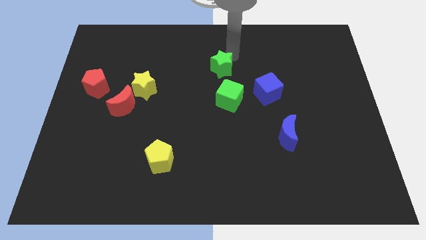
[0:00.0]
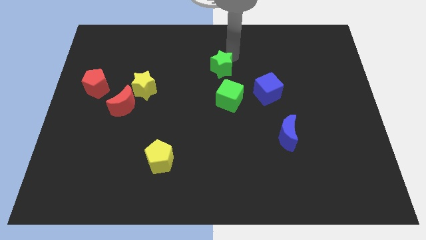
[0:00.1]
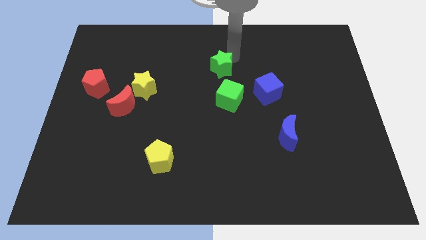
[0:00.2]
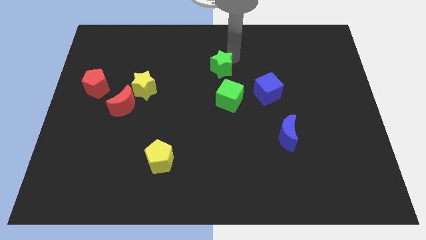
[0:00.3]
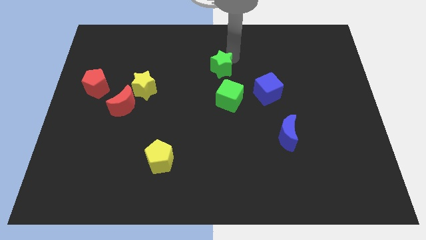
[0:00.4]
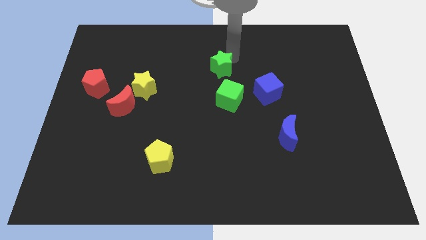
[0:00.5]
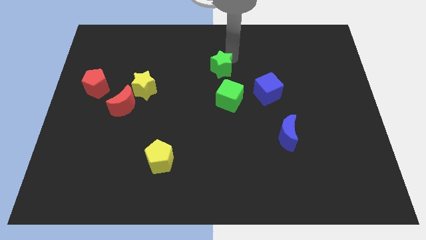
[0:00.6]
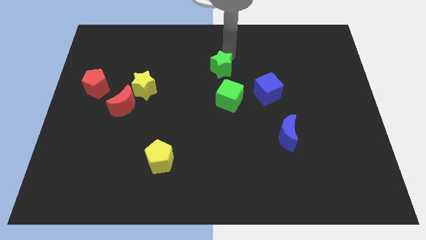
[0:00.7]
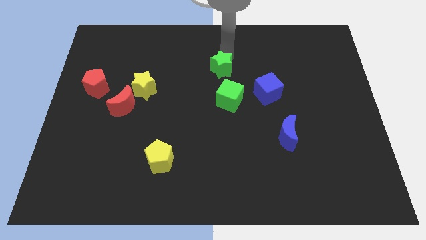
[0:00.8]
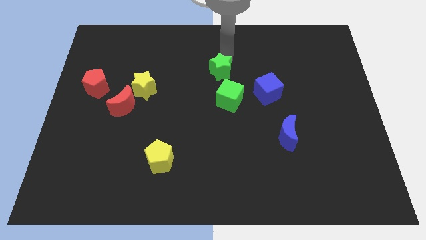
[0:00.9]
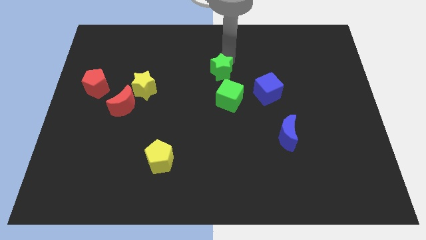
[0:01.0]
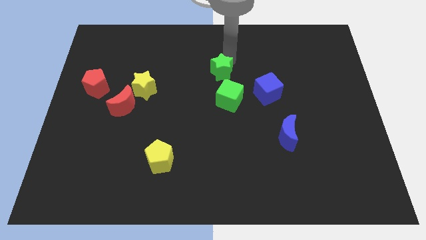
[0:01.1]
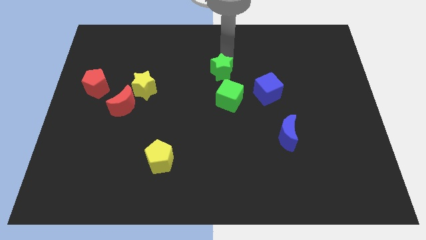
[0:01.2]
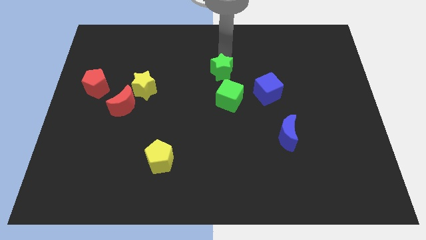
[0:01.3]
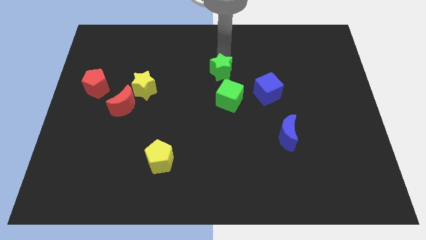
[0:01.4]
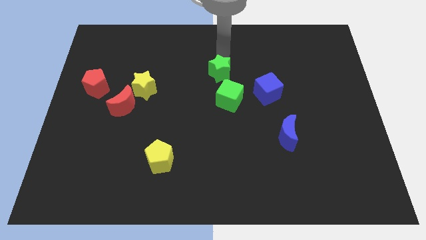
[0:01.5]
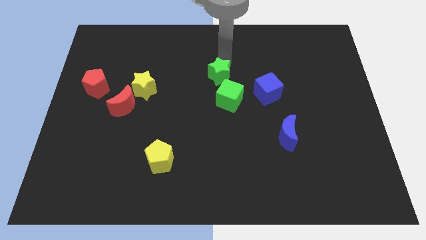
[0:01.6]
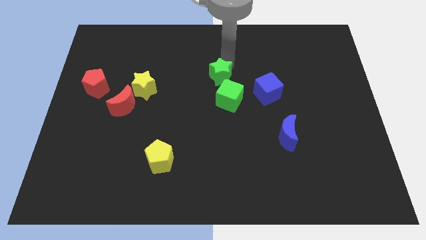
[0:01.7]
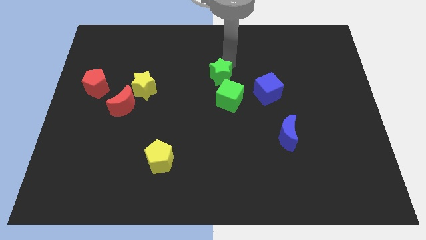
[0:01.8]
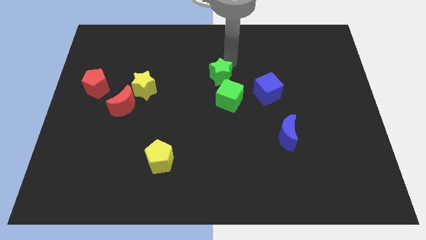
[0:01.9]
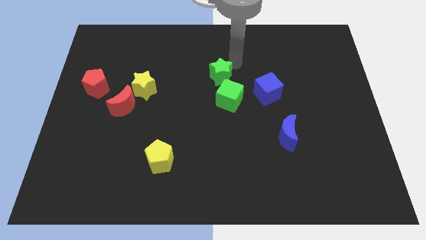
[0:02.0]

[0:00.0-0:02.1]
push the green star slightly downwards

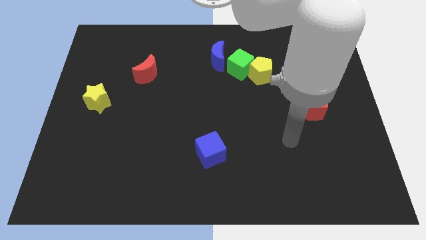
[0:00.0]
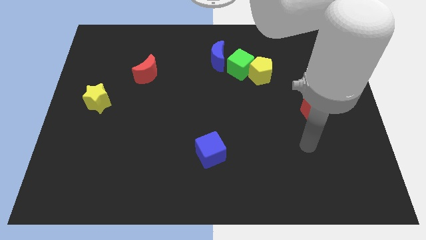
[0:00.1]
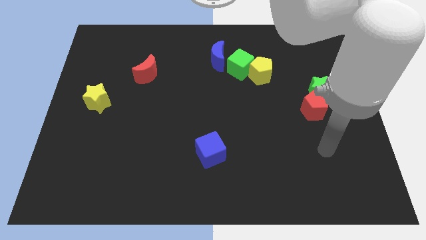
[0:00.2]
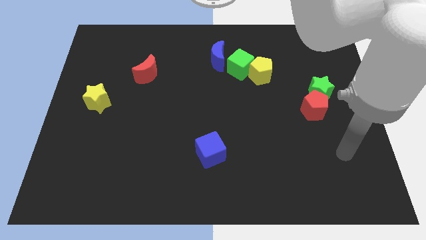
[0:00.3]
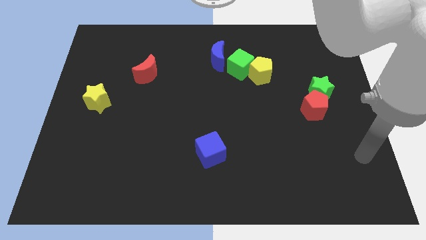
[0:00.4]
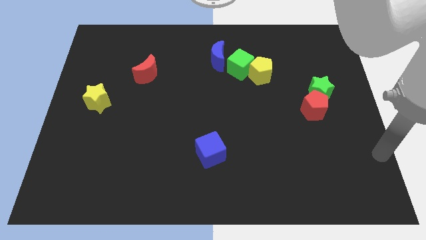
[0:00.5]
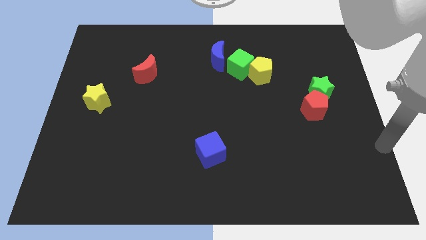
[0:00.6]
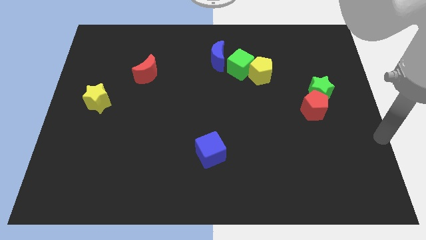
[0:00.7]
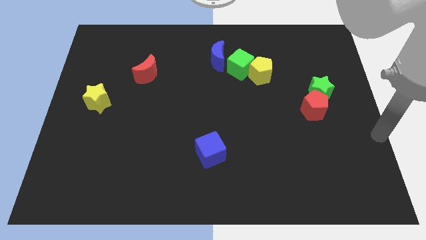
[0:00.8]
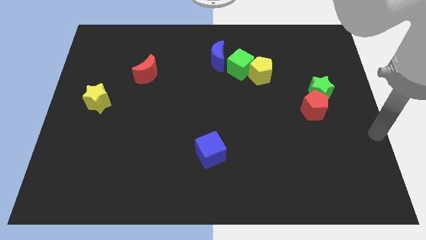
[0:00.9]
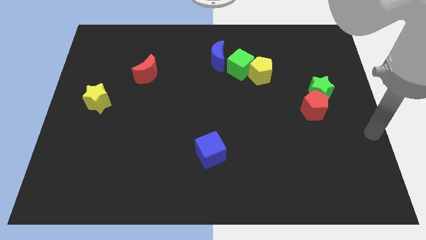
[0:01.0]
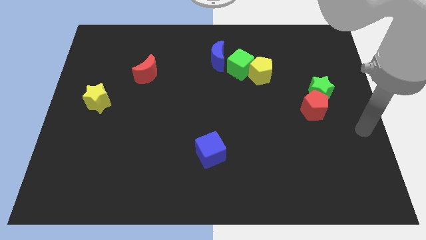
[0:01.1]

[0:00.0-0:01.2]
place your arm to center right

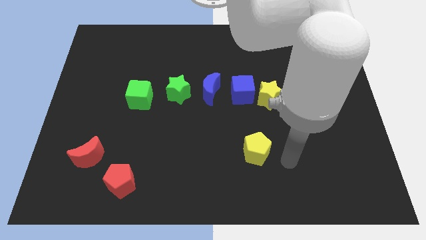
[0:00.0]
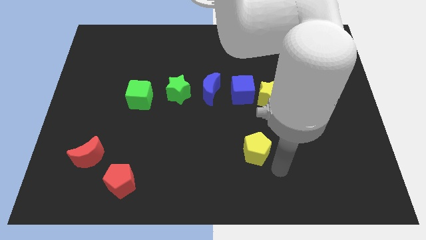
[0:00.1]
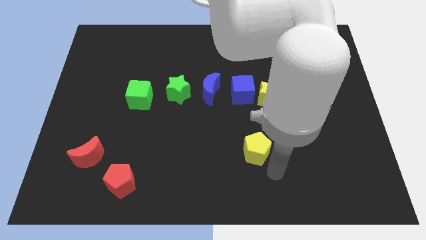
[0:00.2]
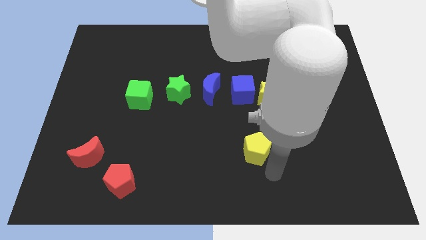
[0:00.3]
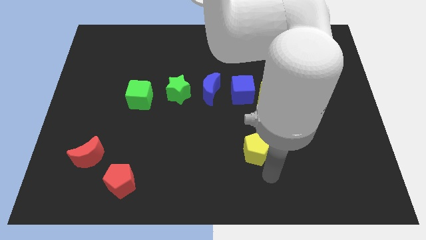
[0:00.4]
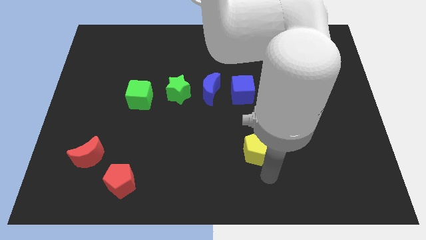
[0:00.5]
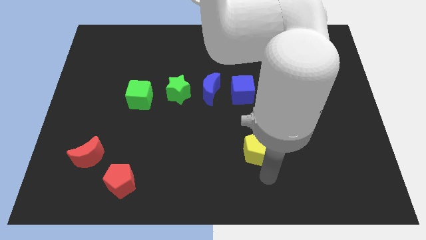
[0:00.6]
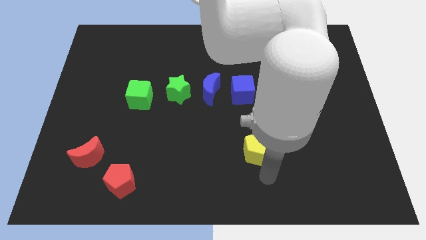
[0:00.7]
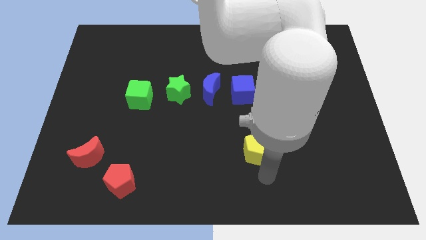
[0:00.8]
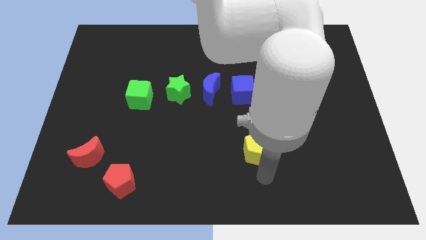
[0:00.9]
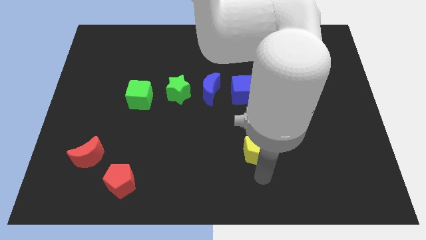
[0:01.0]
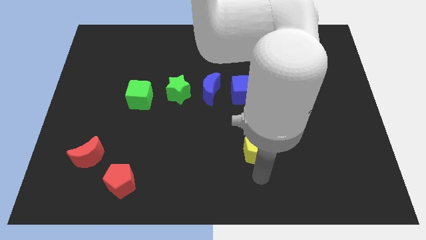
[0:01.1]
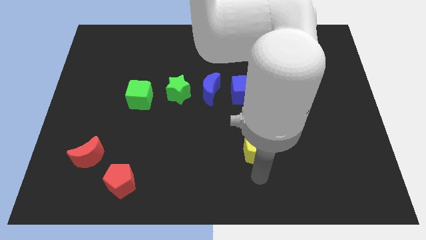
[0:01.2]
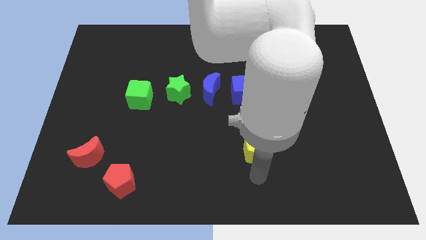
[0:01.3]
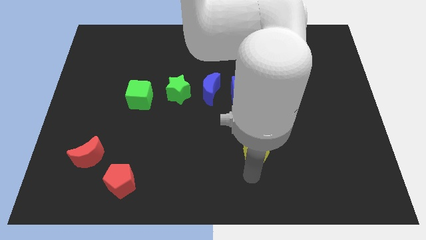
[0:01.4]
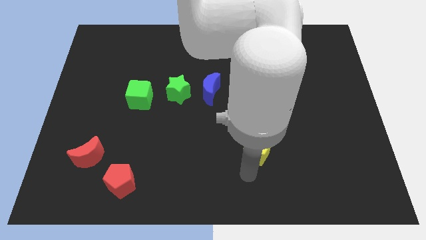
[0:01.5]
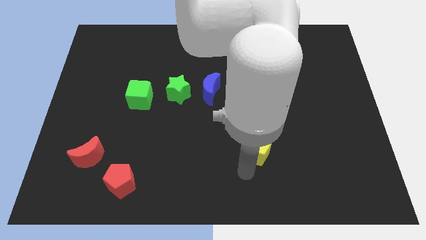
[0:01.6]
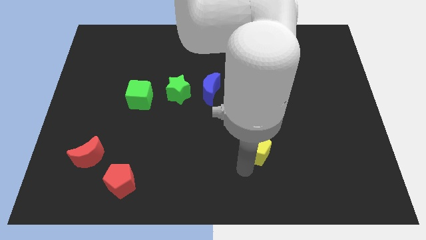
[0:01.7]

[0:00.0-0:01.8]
point the arm below the yellow pentagon

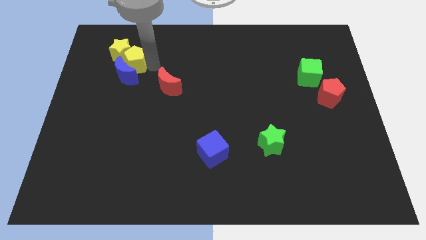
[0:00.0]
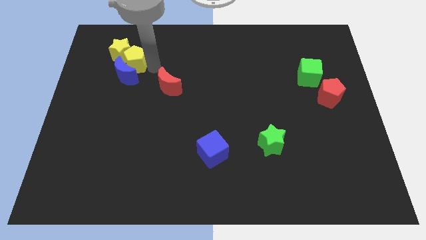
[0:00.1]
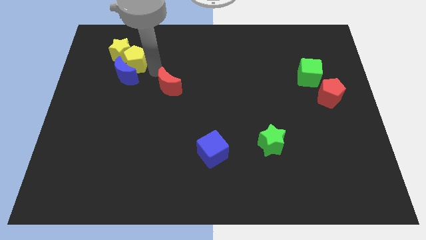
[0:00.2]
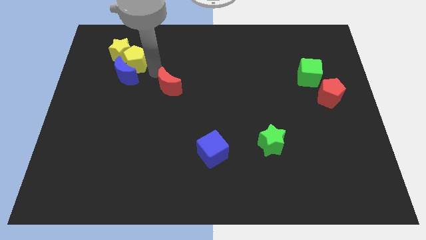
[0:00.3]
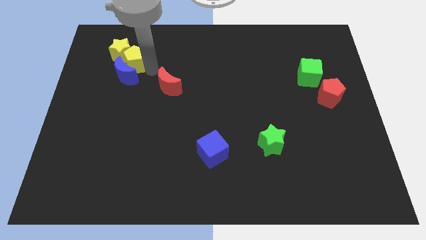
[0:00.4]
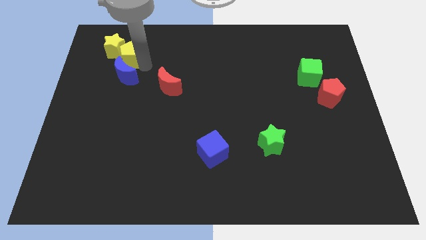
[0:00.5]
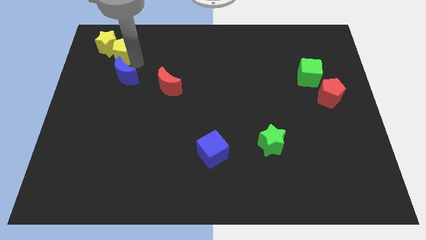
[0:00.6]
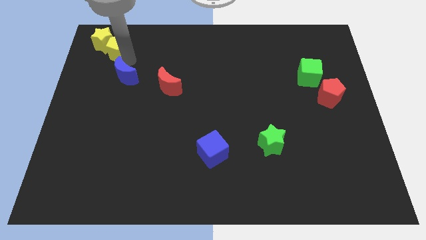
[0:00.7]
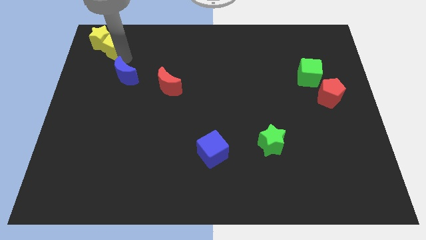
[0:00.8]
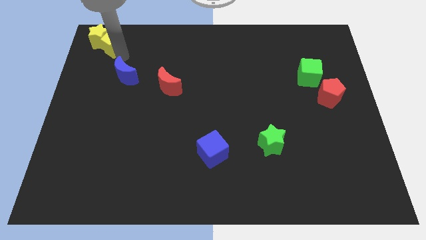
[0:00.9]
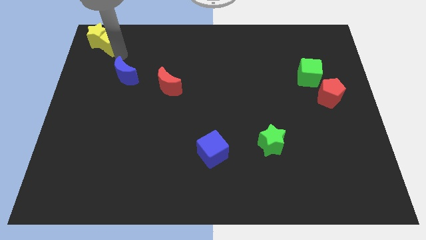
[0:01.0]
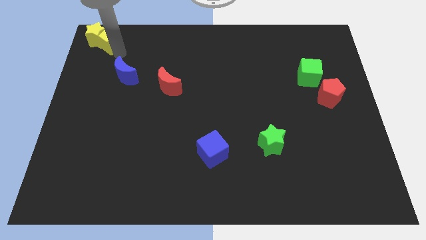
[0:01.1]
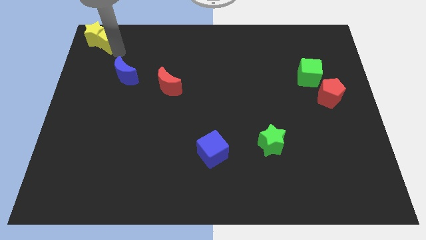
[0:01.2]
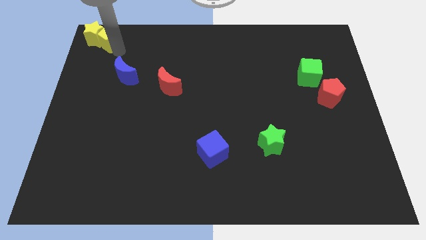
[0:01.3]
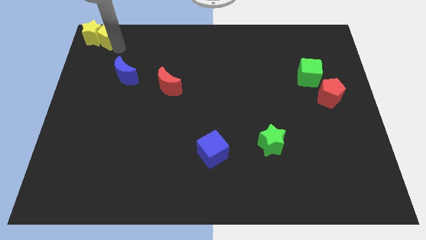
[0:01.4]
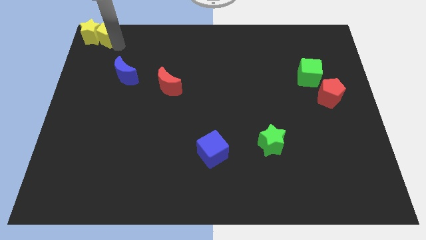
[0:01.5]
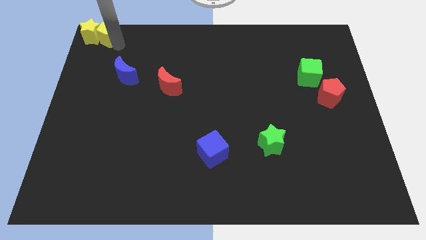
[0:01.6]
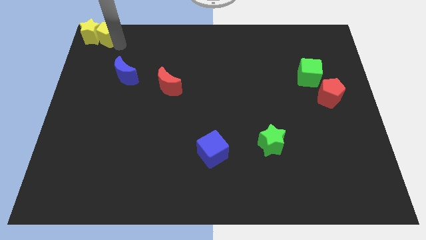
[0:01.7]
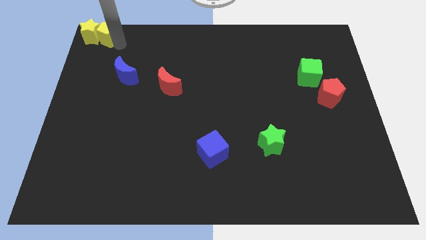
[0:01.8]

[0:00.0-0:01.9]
push yellow pentagon along the yellow star to the top left to the board

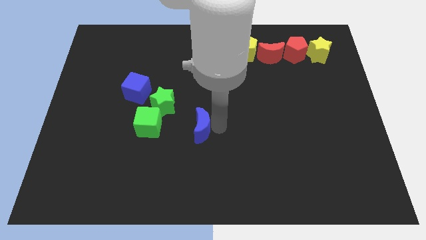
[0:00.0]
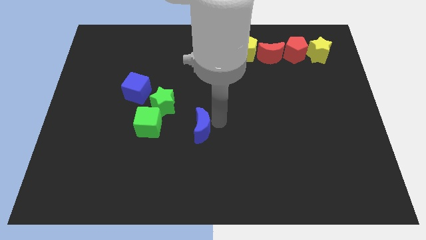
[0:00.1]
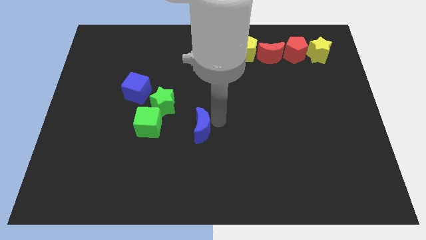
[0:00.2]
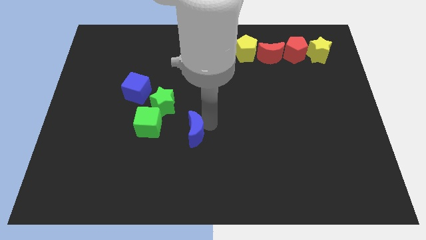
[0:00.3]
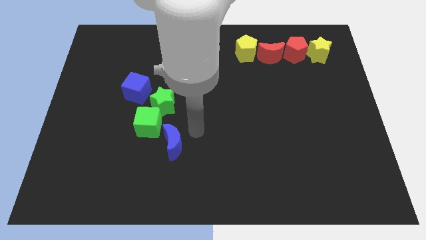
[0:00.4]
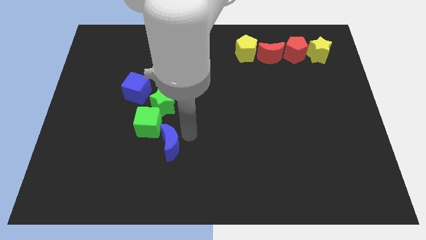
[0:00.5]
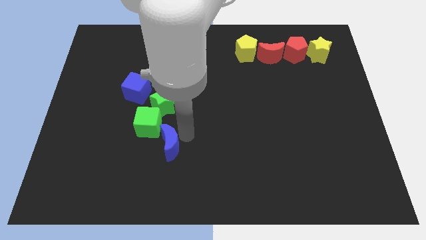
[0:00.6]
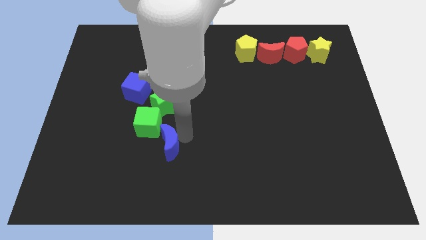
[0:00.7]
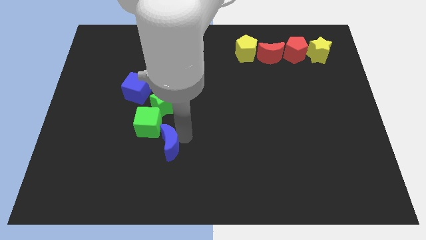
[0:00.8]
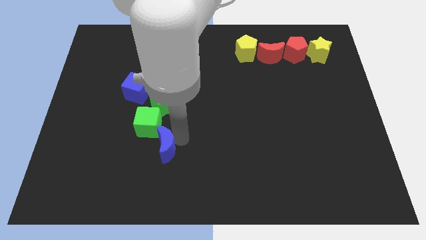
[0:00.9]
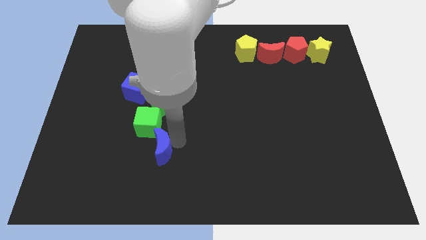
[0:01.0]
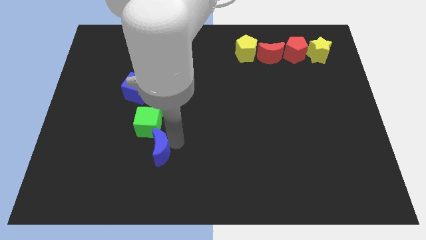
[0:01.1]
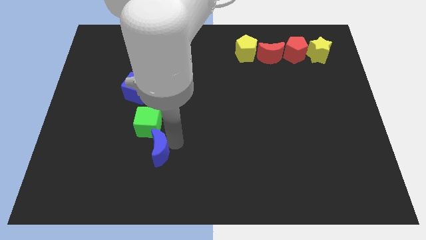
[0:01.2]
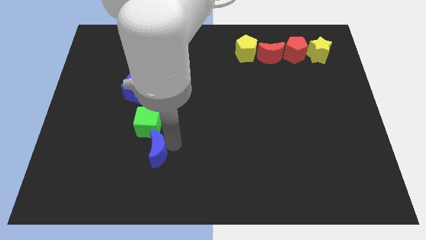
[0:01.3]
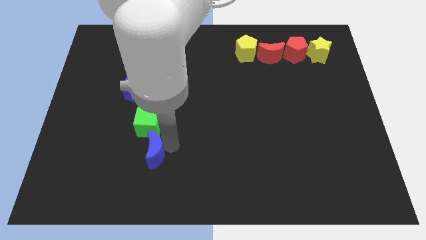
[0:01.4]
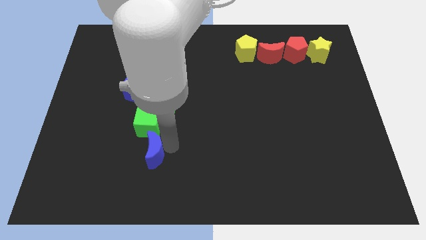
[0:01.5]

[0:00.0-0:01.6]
put the blue crescent below the green cube

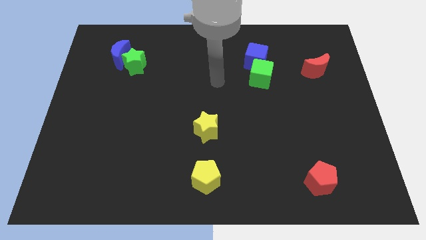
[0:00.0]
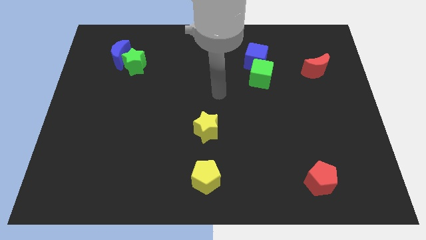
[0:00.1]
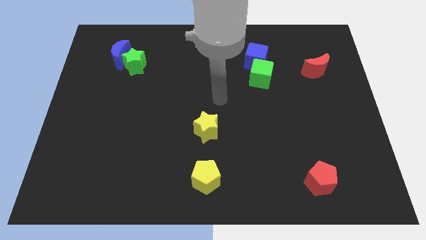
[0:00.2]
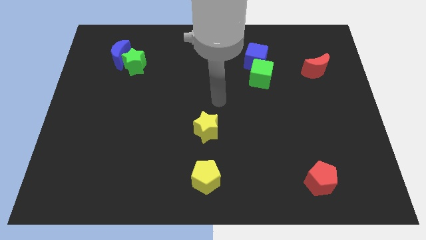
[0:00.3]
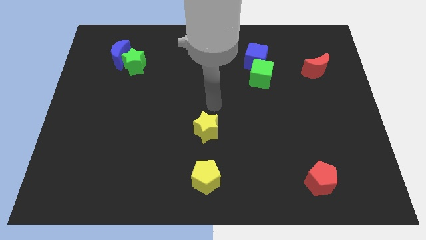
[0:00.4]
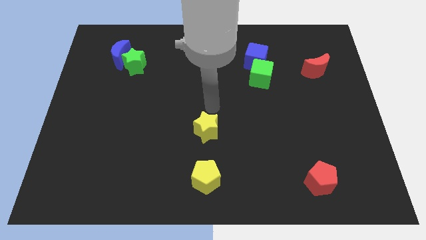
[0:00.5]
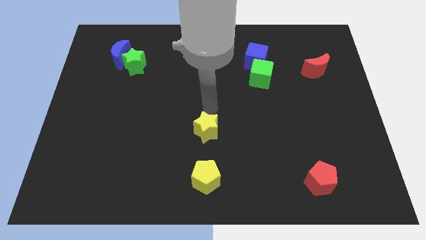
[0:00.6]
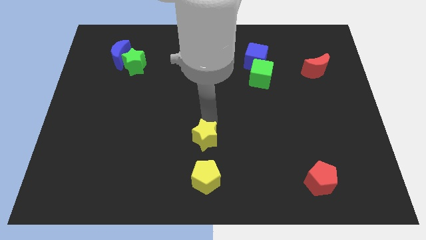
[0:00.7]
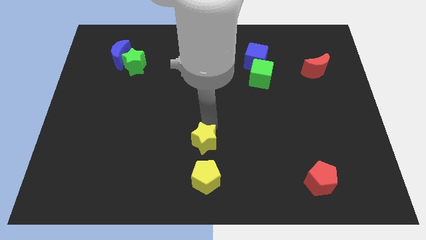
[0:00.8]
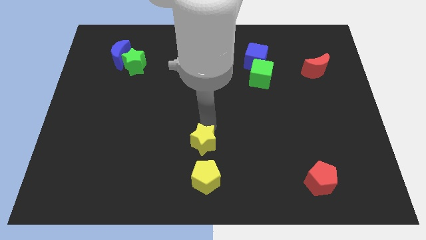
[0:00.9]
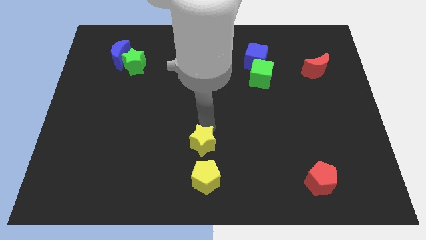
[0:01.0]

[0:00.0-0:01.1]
move the yellow star above the yellow penatgon
